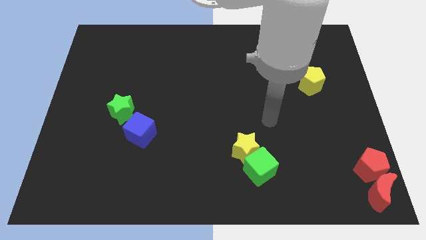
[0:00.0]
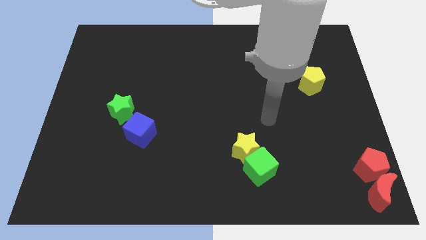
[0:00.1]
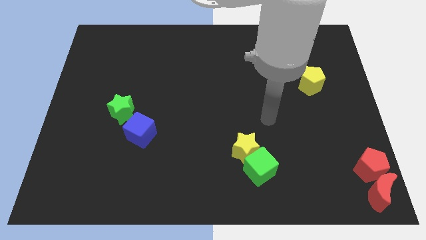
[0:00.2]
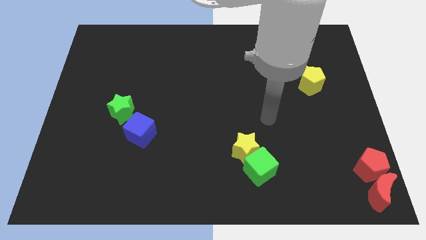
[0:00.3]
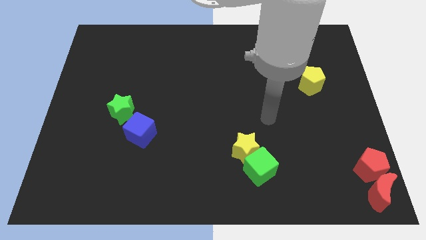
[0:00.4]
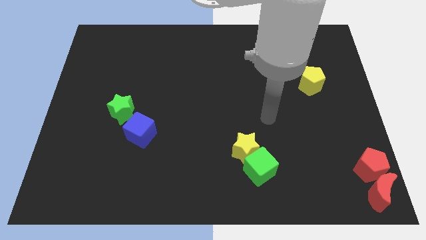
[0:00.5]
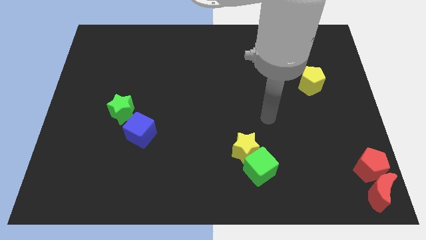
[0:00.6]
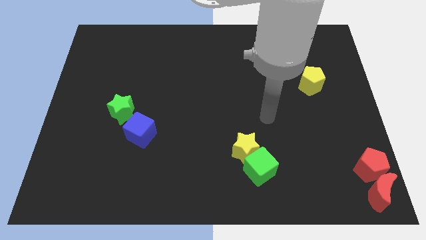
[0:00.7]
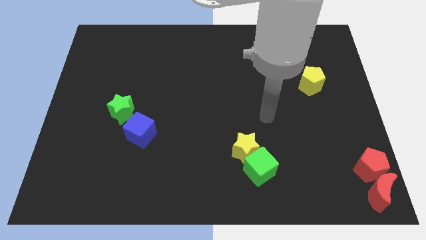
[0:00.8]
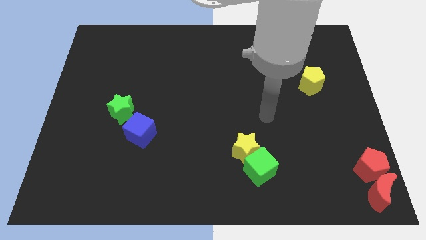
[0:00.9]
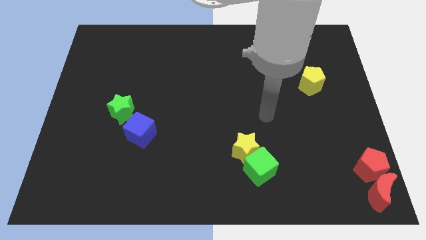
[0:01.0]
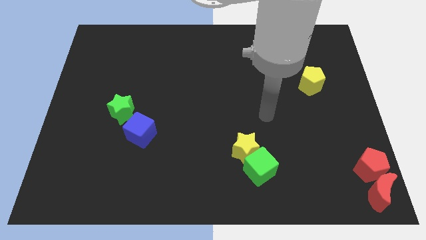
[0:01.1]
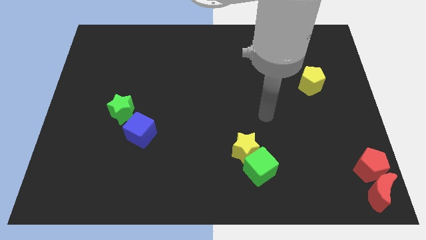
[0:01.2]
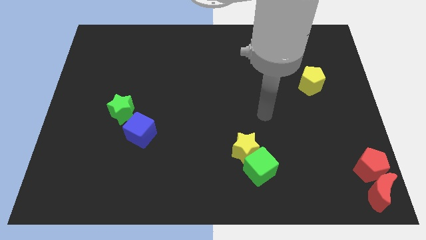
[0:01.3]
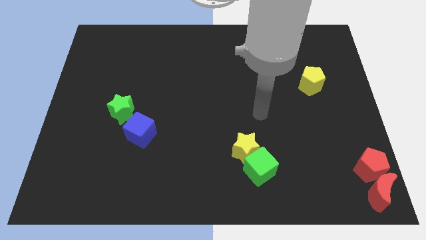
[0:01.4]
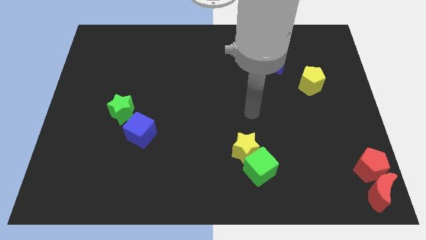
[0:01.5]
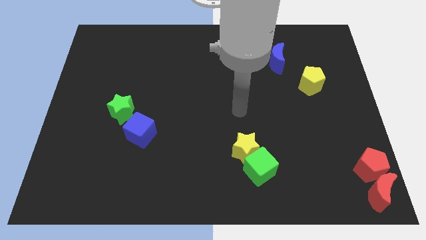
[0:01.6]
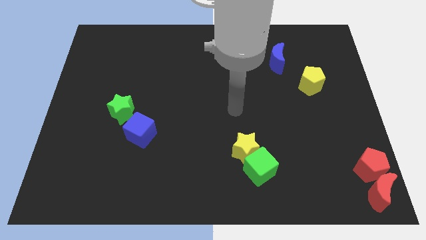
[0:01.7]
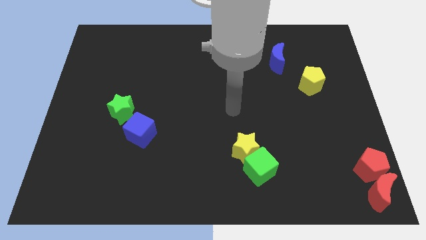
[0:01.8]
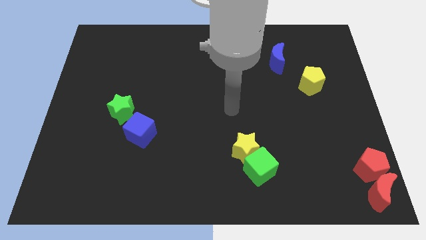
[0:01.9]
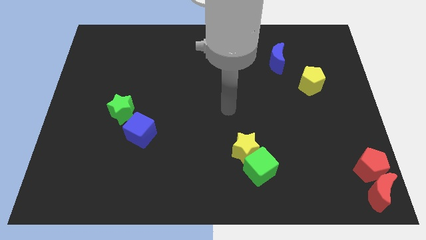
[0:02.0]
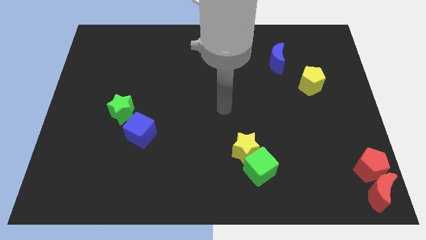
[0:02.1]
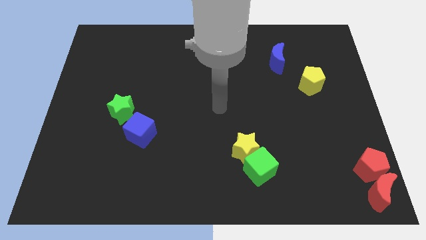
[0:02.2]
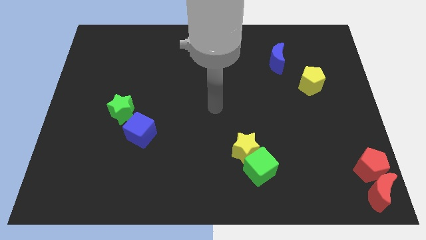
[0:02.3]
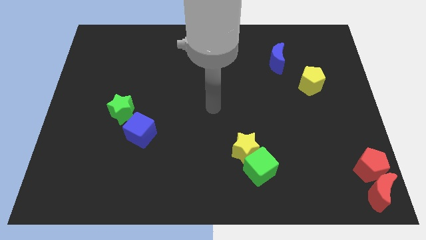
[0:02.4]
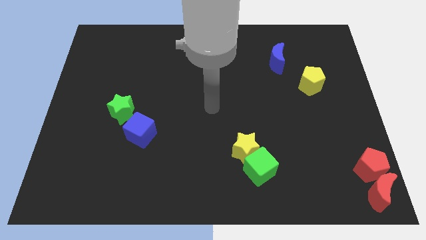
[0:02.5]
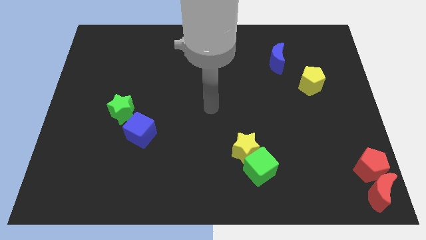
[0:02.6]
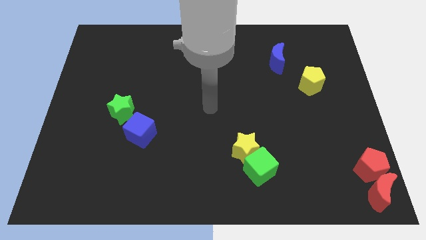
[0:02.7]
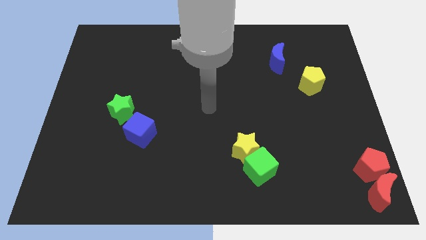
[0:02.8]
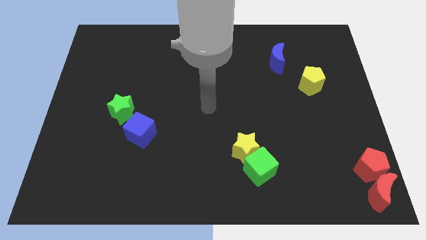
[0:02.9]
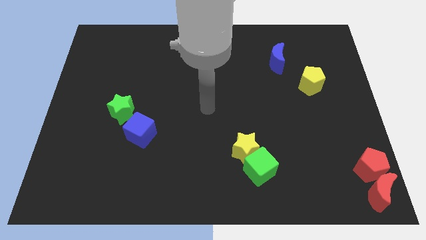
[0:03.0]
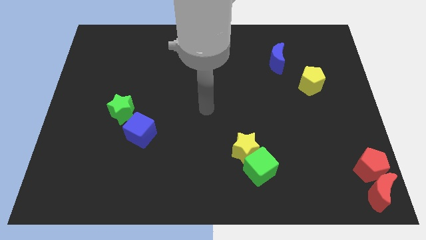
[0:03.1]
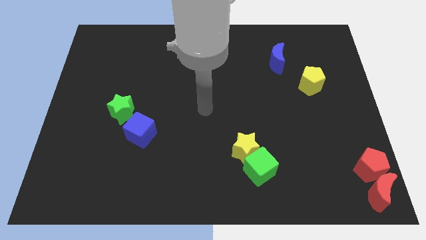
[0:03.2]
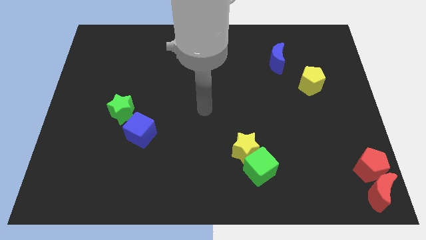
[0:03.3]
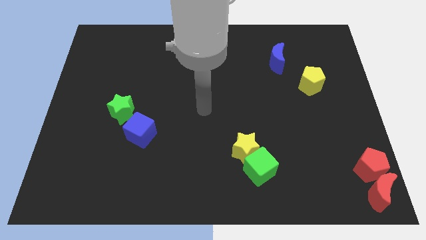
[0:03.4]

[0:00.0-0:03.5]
drag your arm to the center of the board

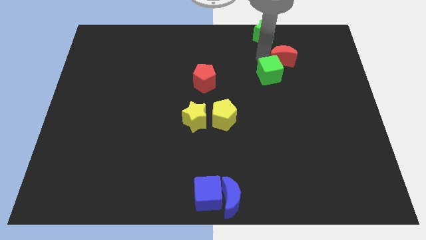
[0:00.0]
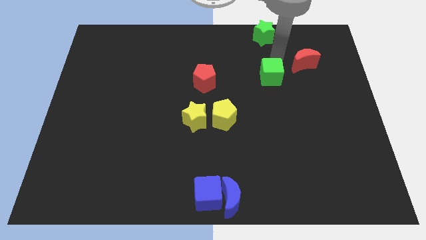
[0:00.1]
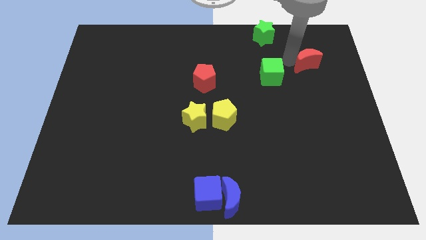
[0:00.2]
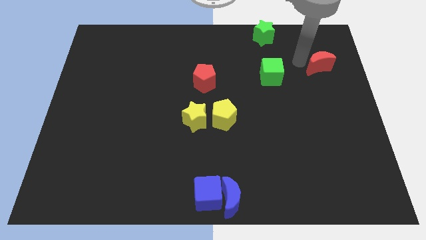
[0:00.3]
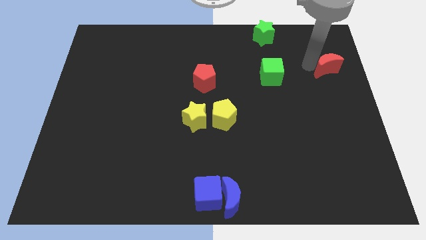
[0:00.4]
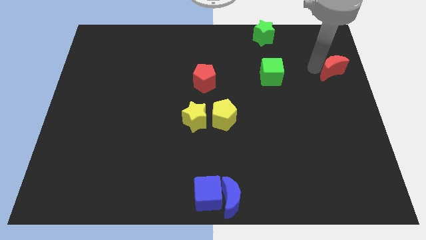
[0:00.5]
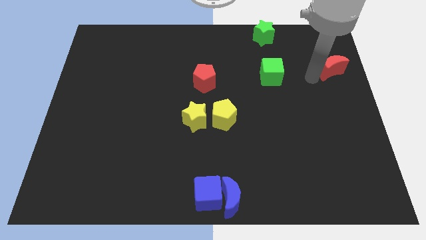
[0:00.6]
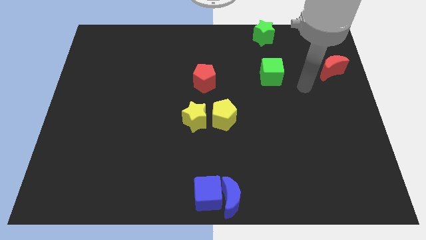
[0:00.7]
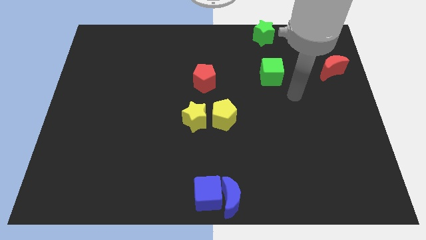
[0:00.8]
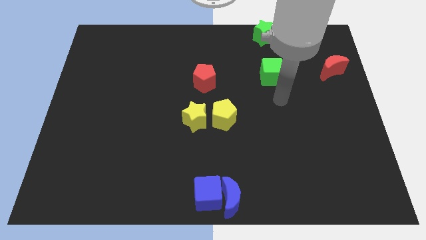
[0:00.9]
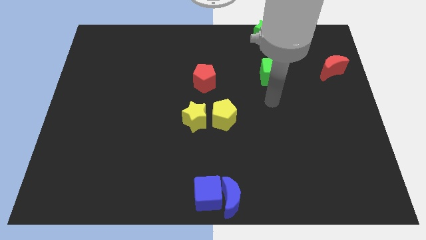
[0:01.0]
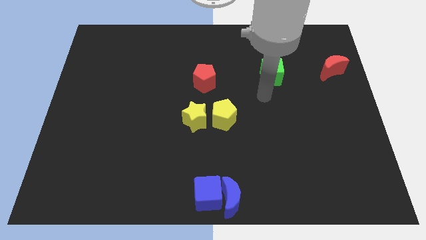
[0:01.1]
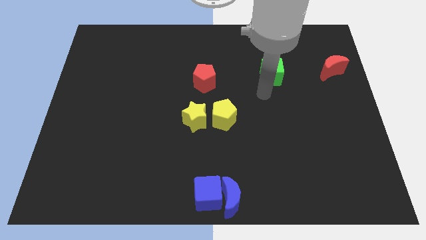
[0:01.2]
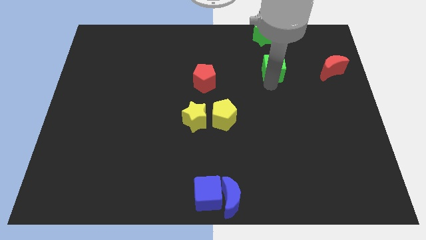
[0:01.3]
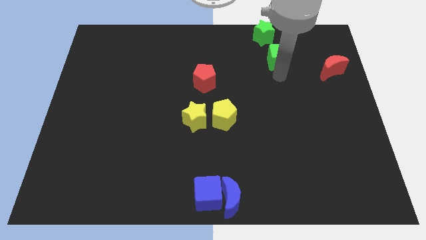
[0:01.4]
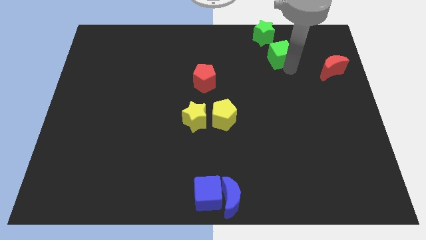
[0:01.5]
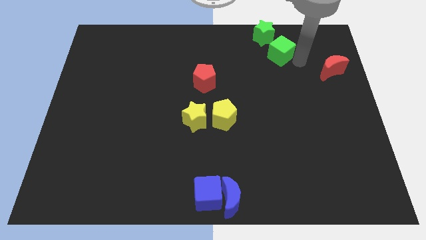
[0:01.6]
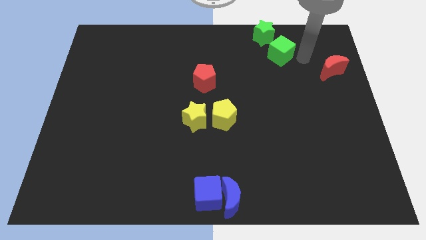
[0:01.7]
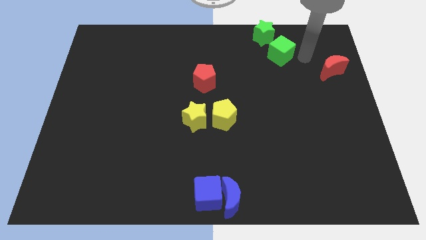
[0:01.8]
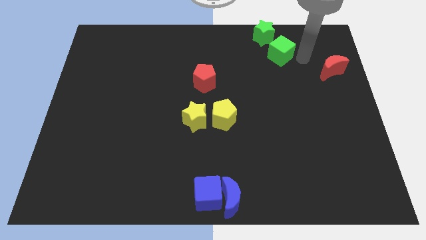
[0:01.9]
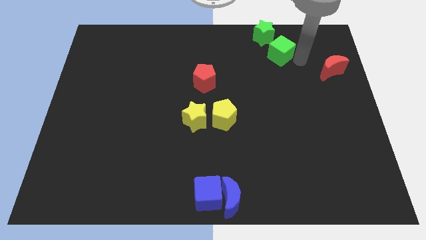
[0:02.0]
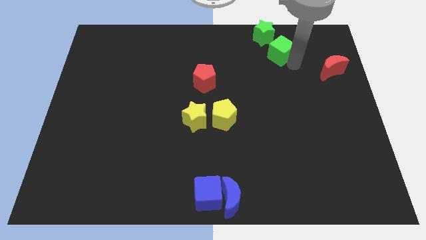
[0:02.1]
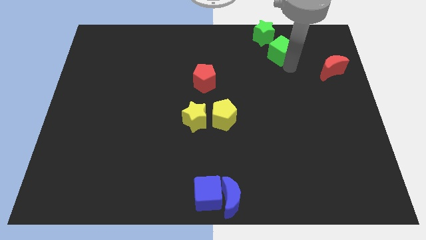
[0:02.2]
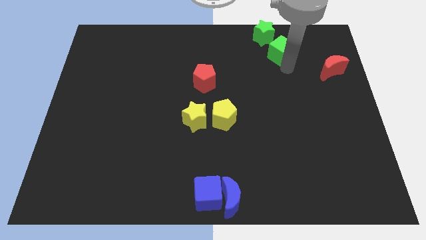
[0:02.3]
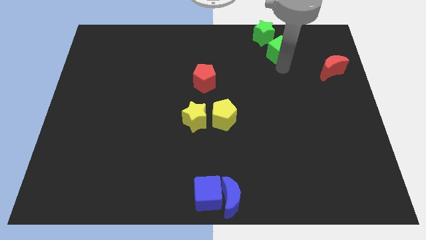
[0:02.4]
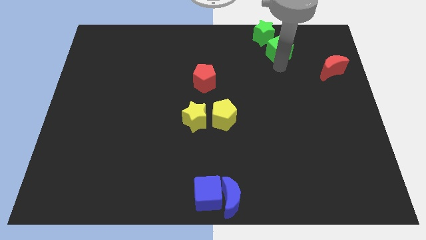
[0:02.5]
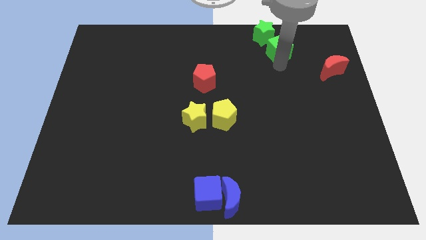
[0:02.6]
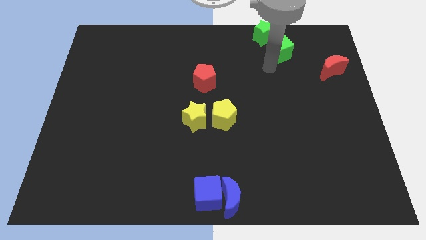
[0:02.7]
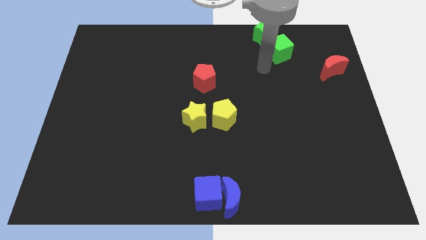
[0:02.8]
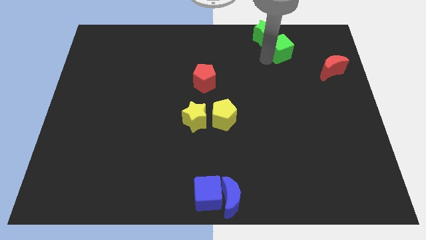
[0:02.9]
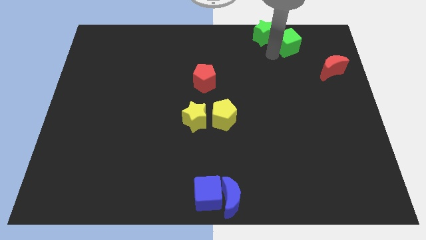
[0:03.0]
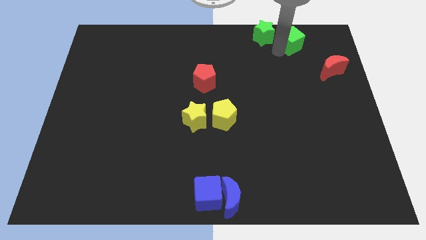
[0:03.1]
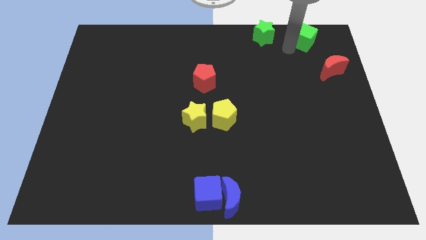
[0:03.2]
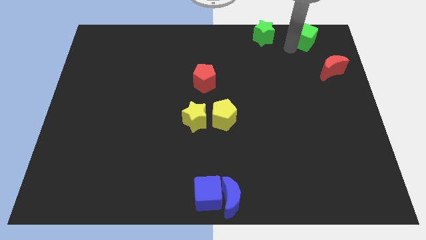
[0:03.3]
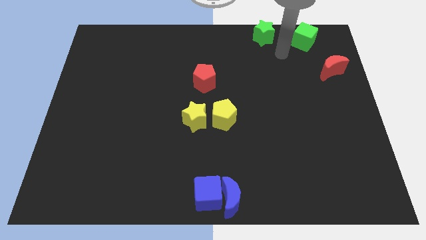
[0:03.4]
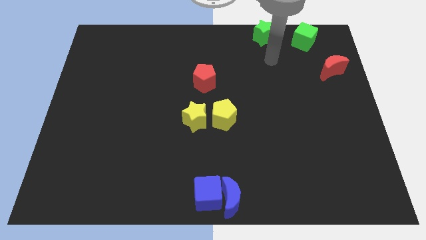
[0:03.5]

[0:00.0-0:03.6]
place green cube to the right of green star

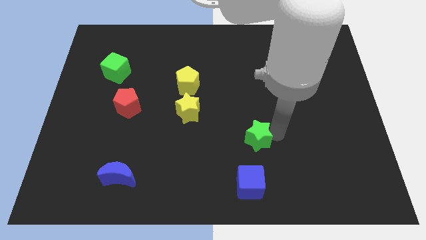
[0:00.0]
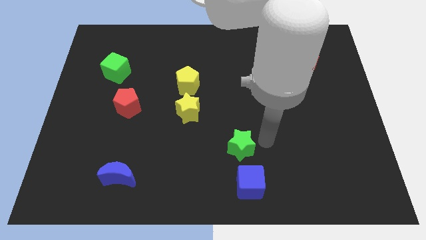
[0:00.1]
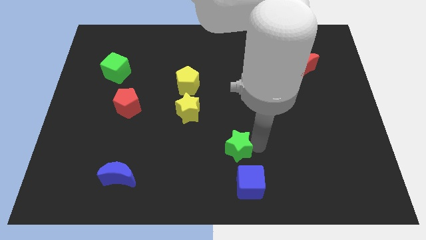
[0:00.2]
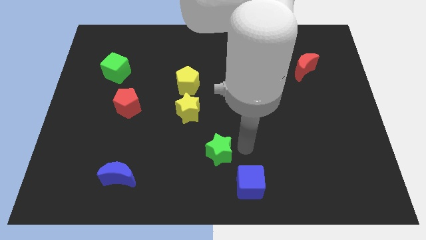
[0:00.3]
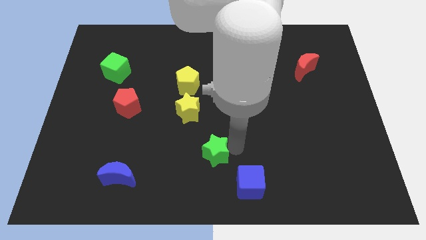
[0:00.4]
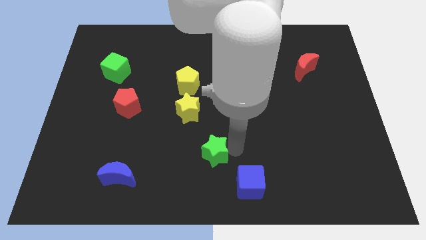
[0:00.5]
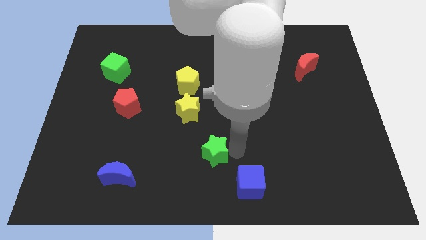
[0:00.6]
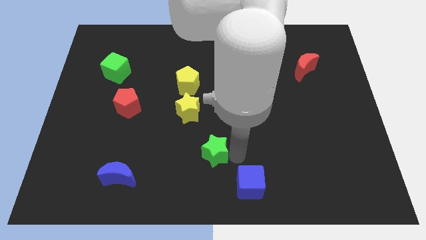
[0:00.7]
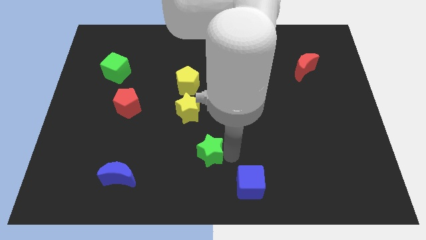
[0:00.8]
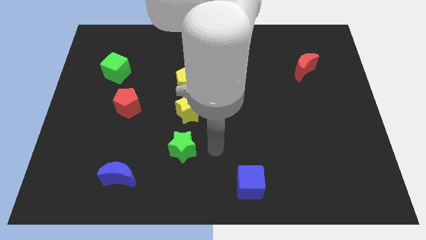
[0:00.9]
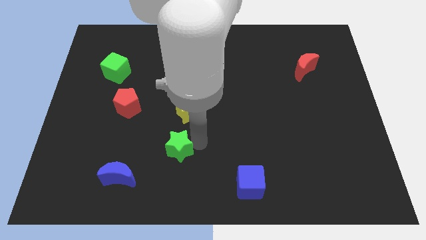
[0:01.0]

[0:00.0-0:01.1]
place green star to the bottom of yellow star

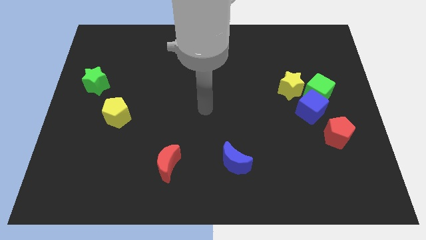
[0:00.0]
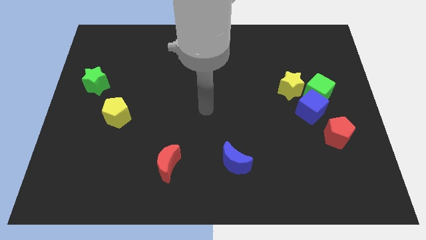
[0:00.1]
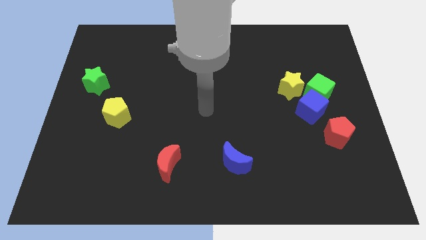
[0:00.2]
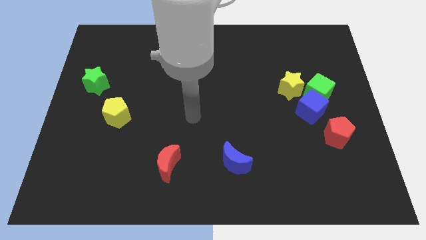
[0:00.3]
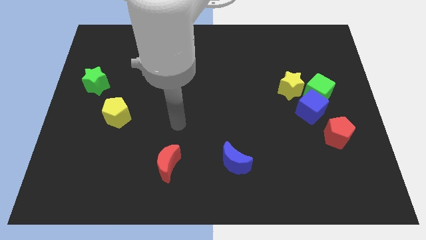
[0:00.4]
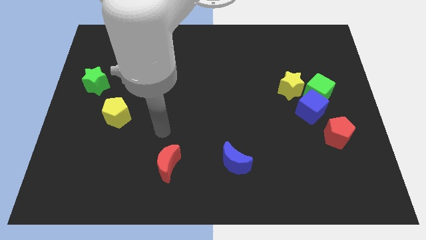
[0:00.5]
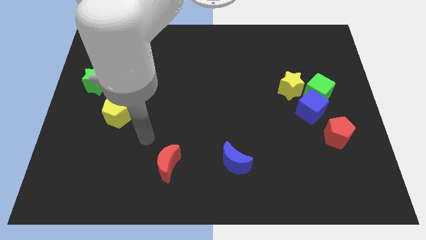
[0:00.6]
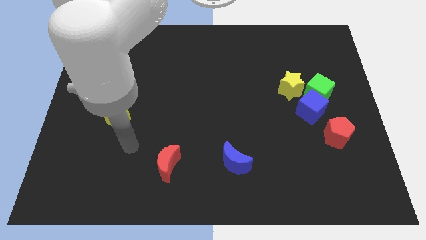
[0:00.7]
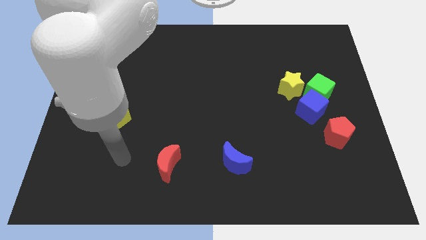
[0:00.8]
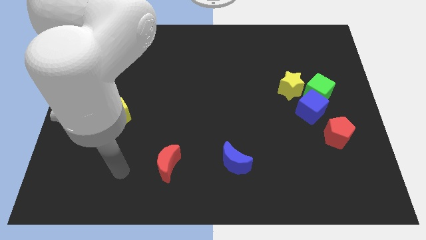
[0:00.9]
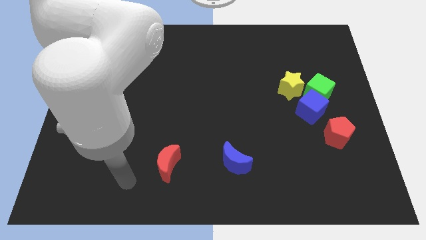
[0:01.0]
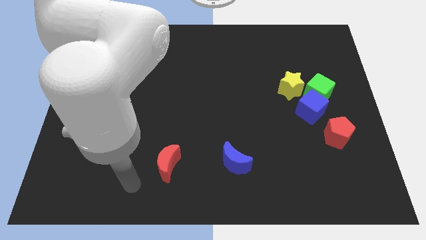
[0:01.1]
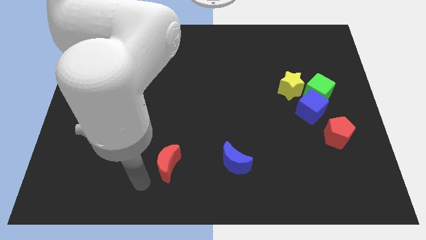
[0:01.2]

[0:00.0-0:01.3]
move the arm towards the red moon
